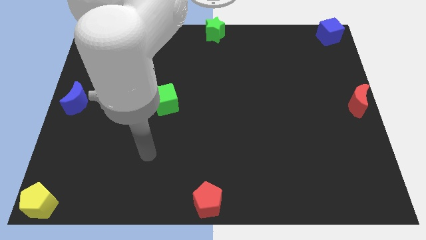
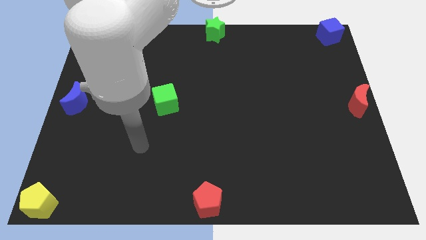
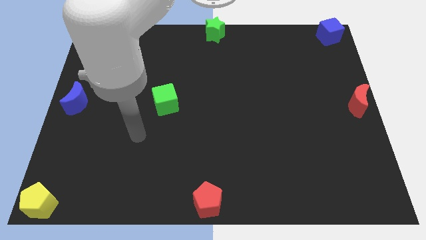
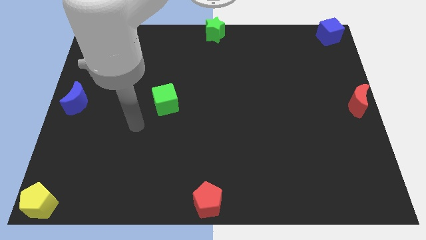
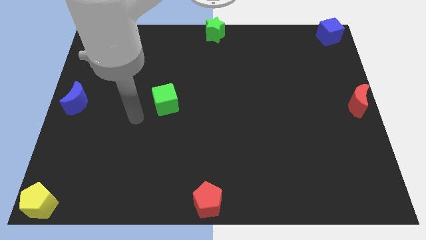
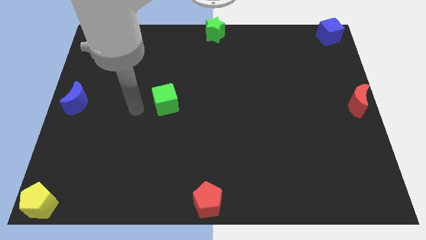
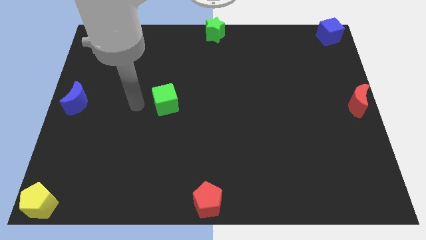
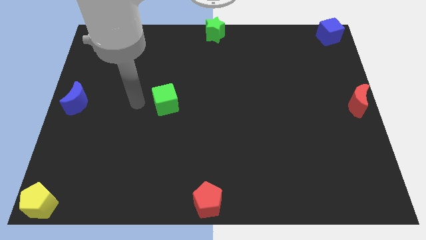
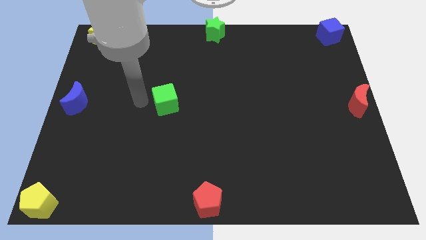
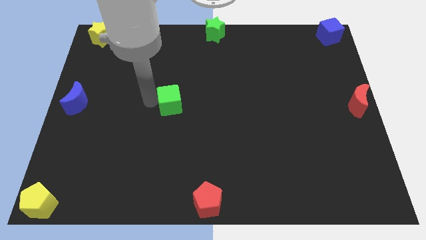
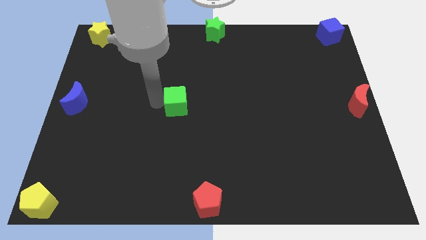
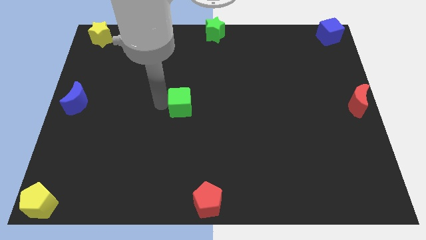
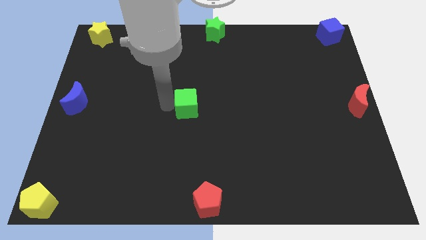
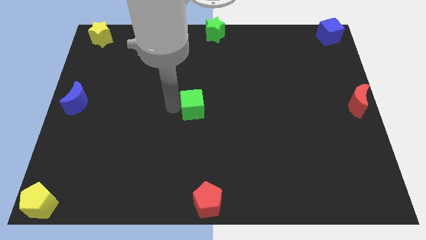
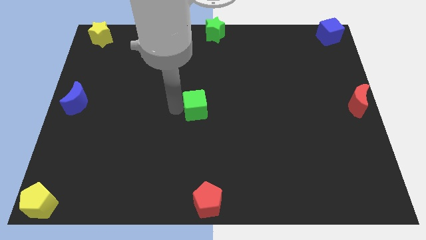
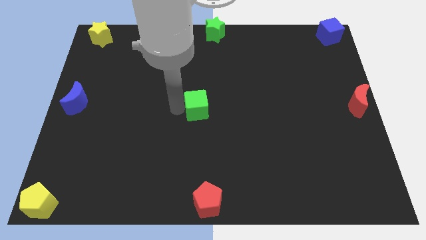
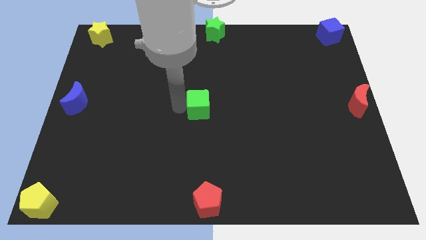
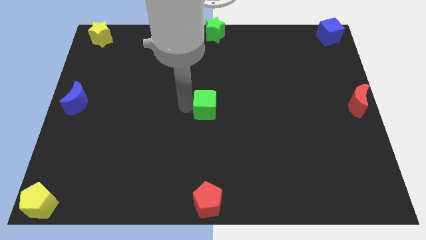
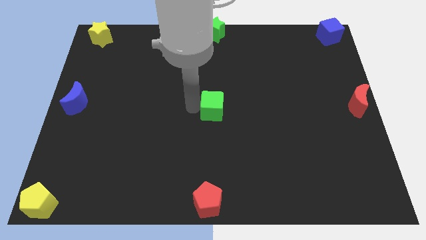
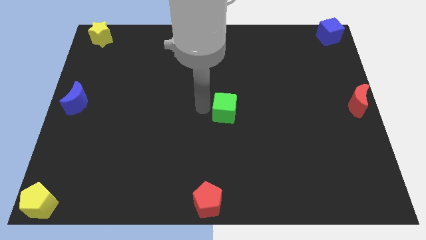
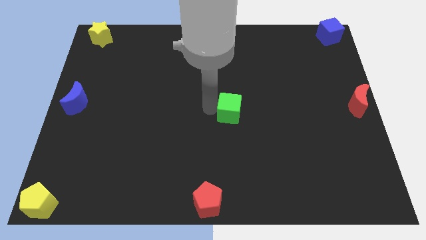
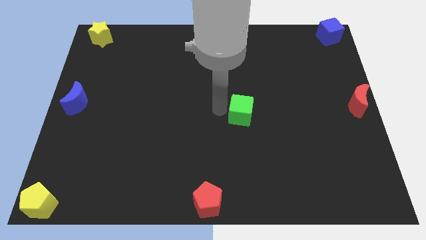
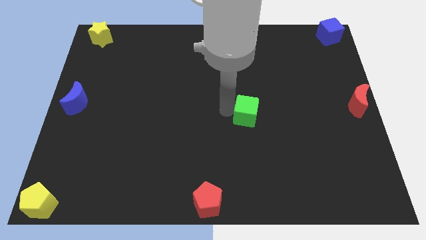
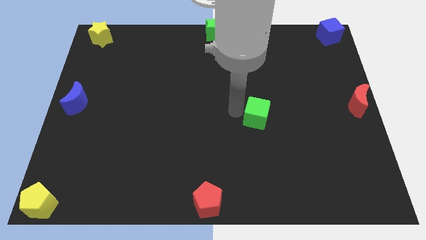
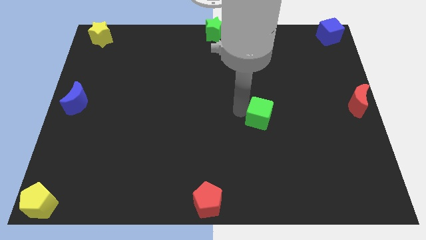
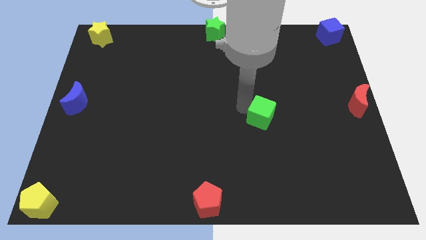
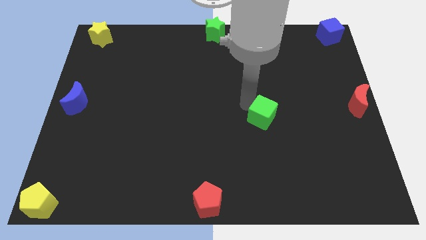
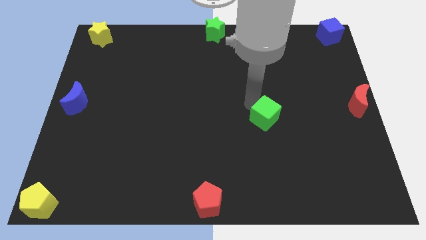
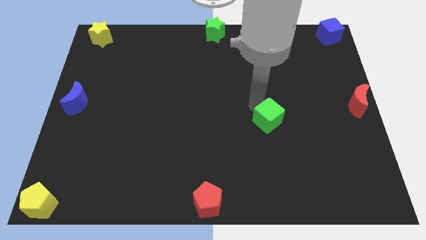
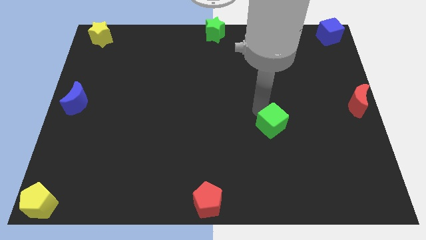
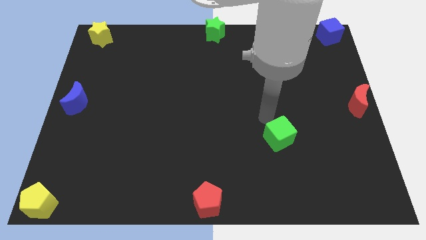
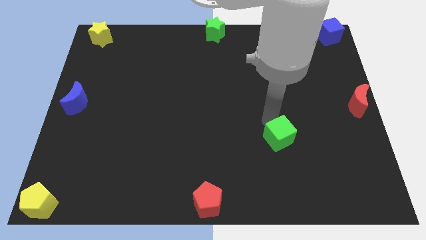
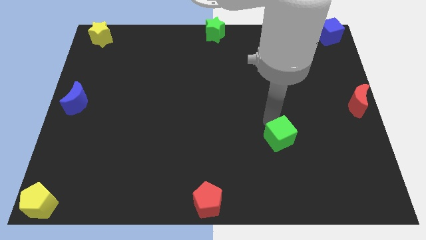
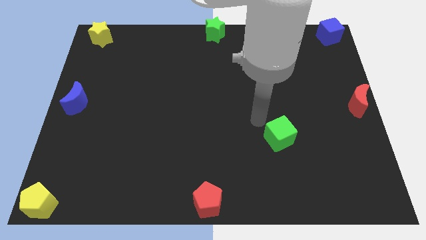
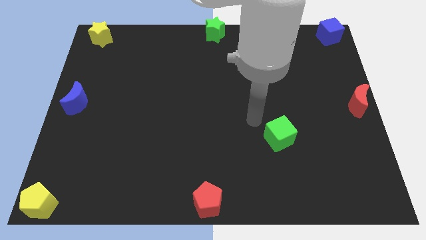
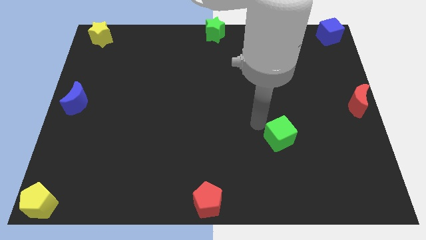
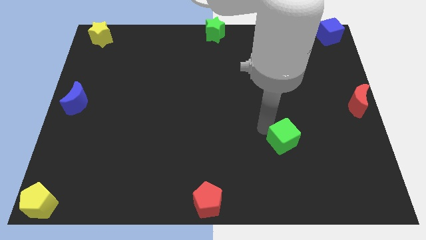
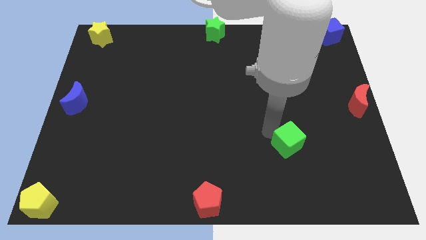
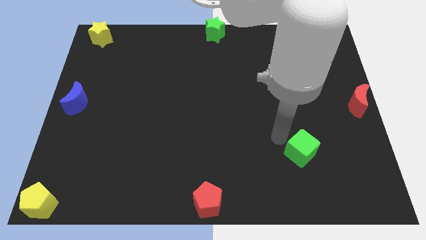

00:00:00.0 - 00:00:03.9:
put the green cube between the red blocks

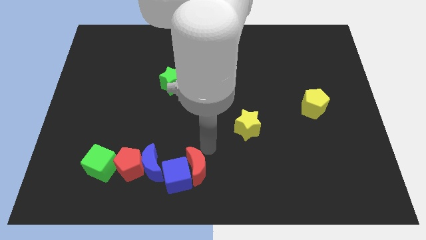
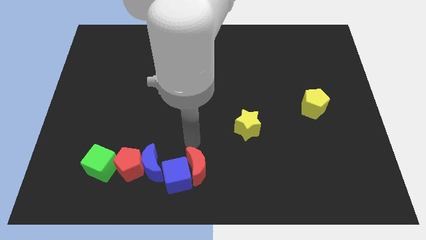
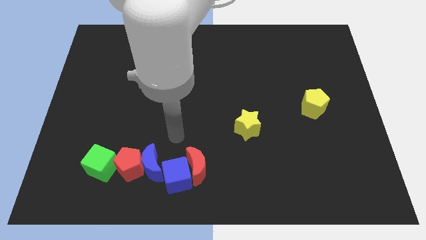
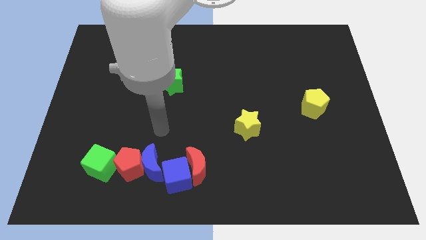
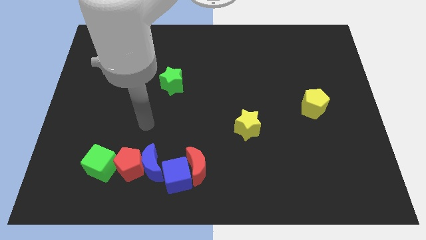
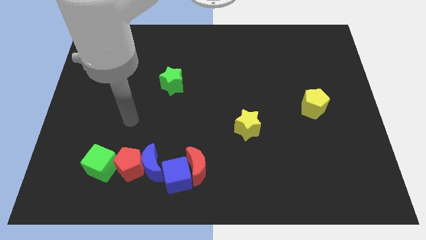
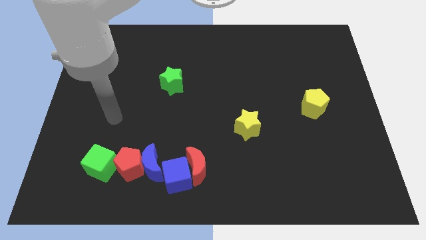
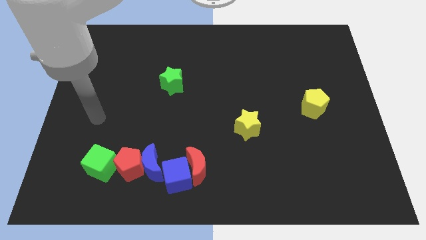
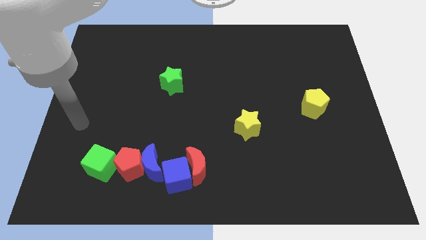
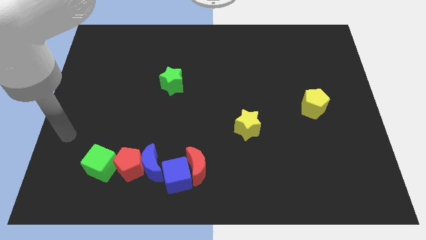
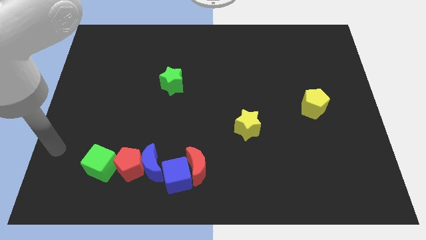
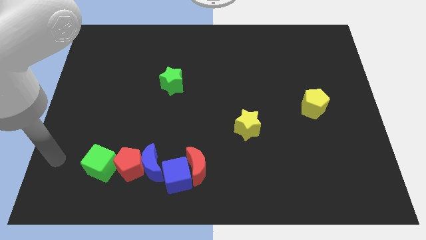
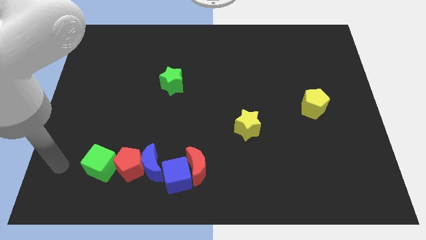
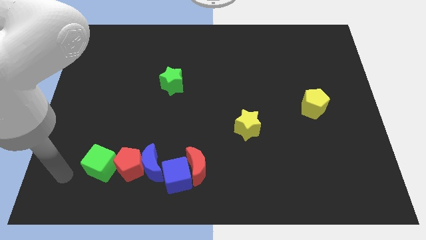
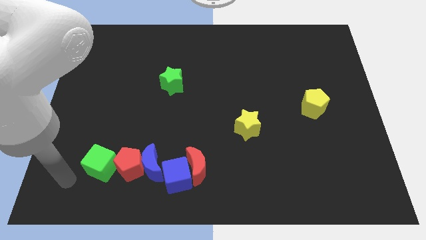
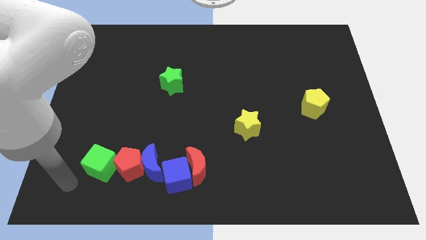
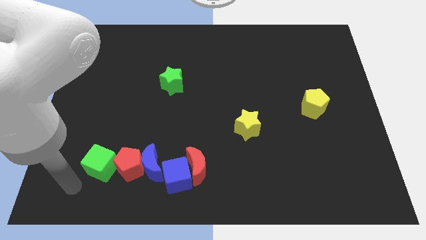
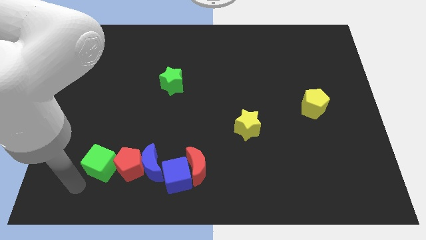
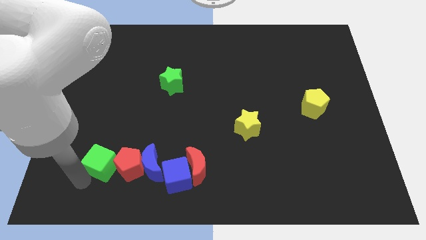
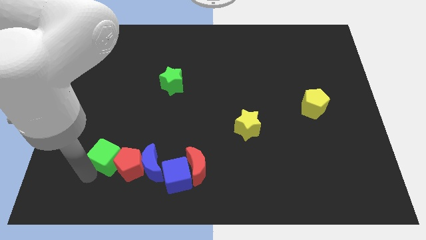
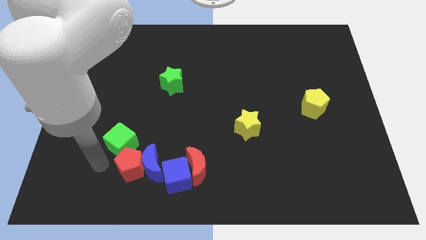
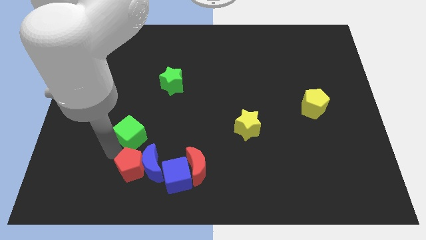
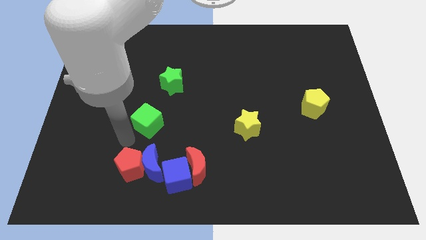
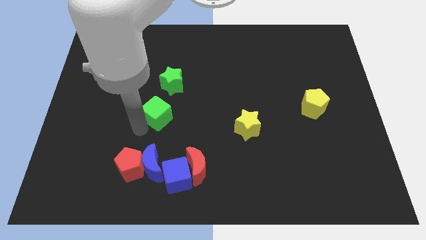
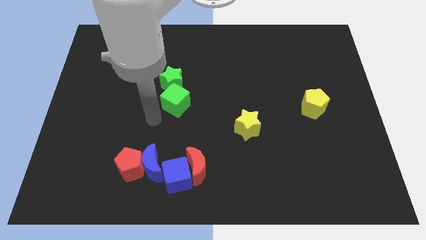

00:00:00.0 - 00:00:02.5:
move the green cube to the bottom of the green star

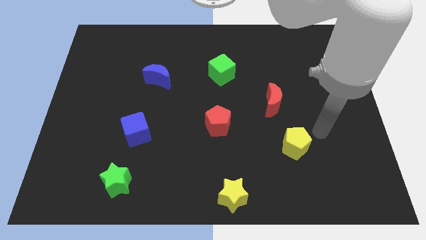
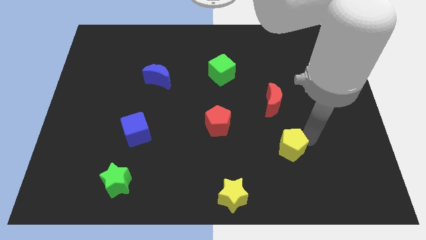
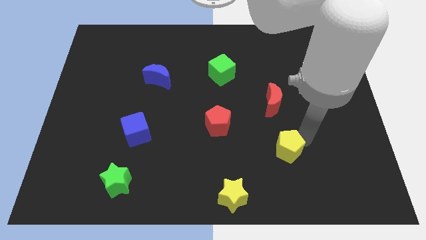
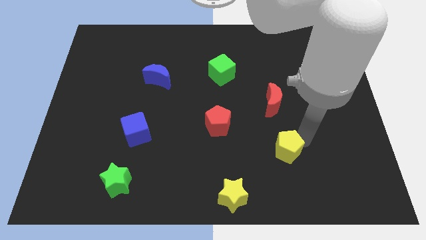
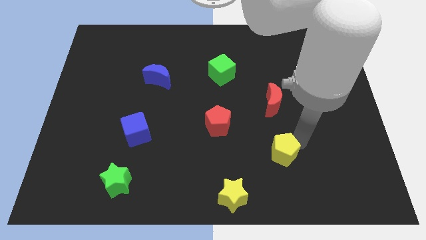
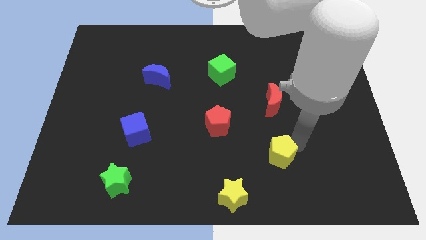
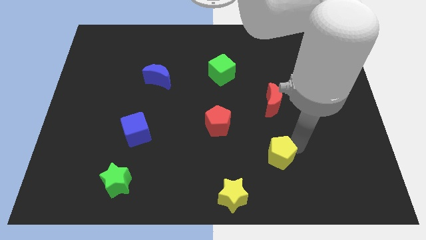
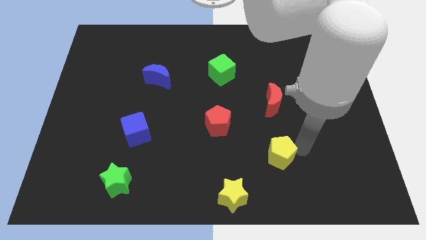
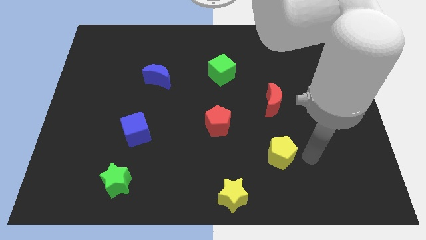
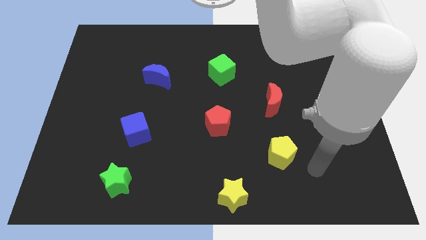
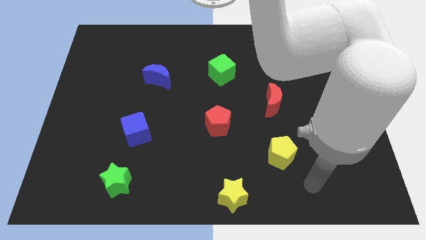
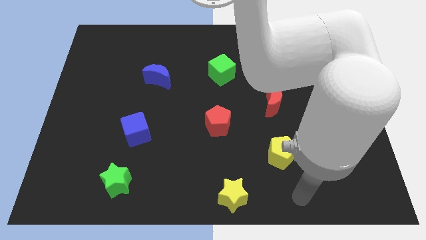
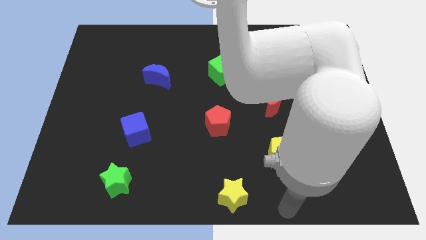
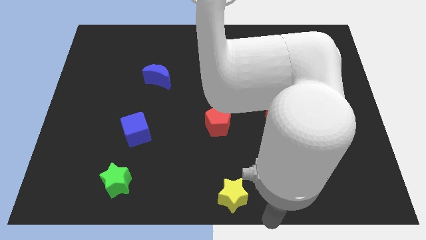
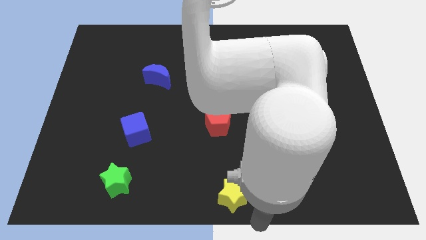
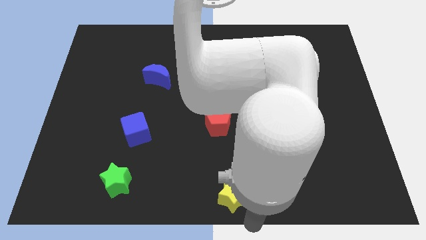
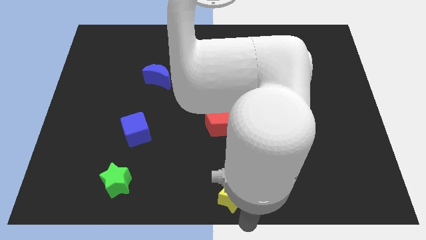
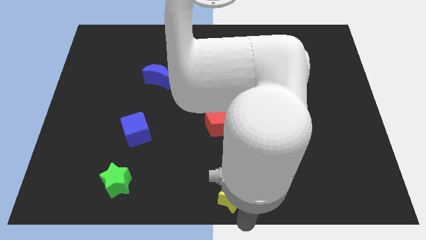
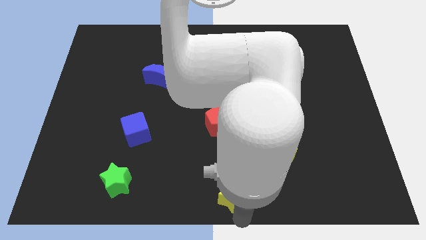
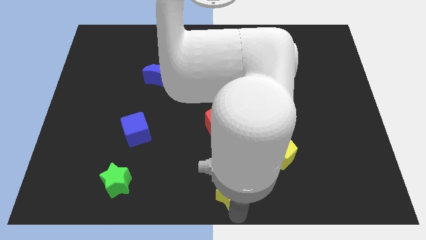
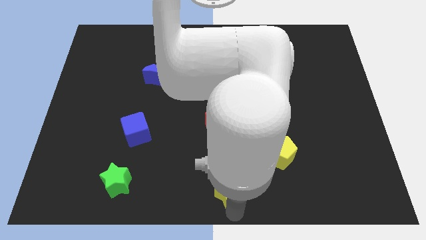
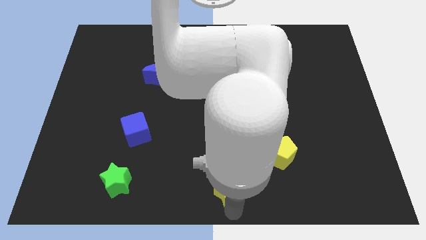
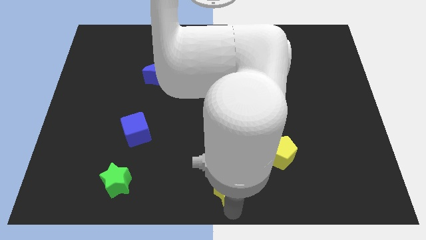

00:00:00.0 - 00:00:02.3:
push the yellow pentagon below the red crescent

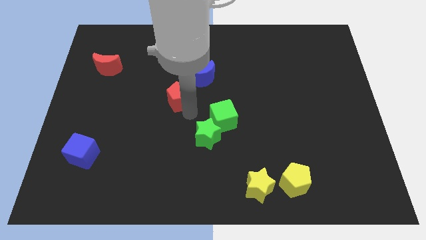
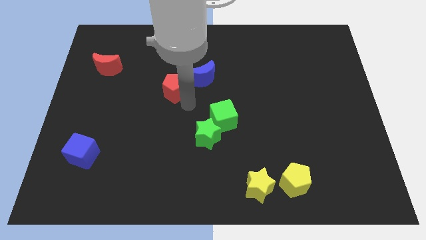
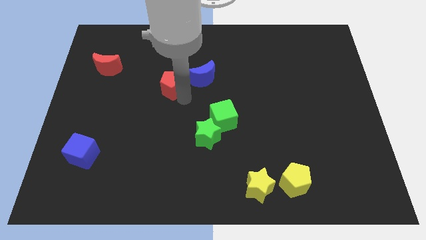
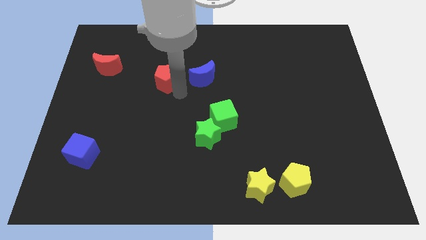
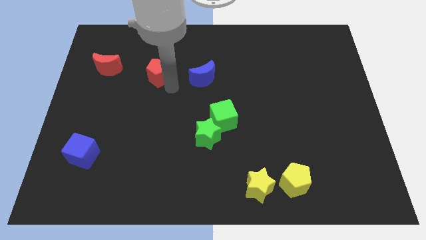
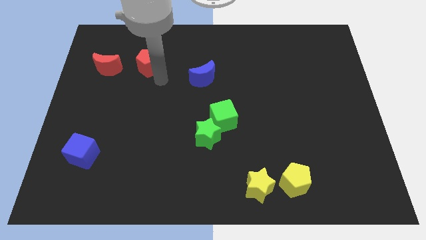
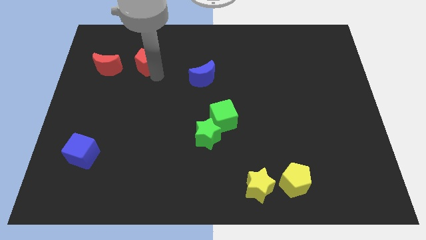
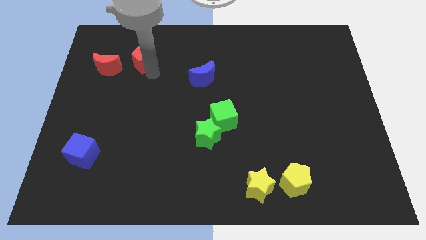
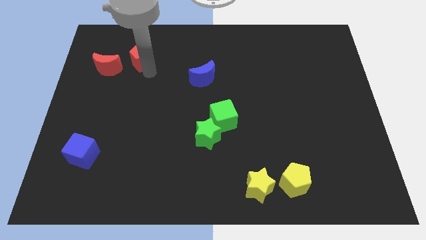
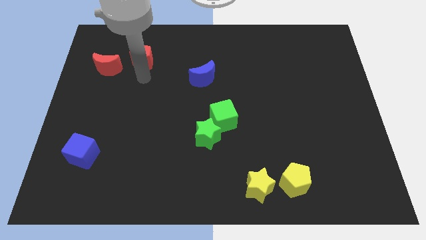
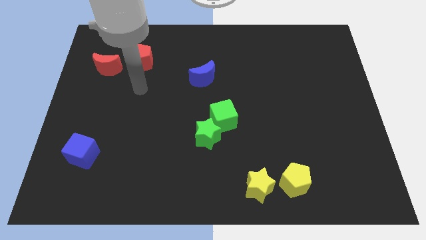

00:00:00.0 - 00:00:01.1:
place red pentagon to the right of the red moon
